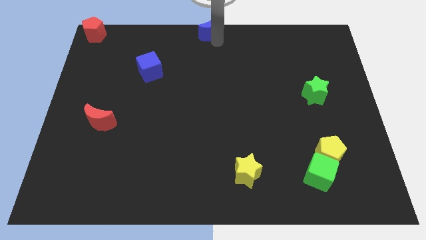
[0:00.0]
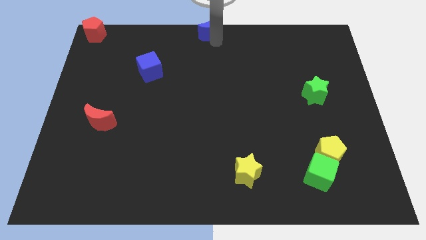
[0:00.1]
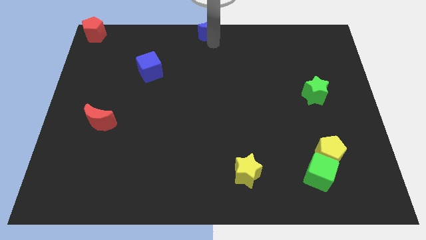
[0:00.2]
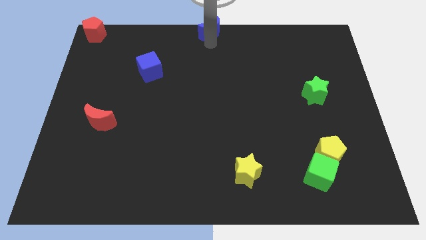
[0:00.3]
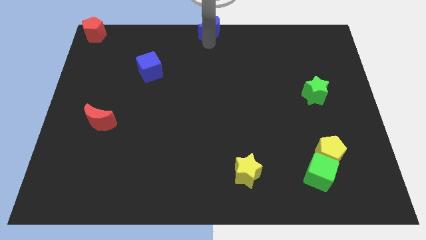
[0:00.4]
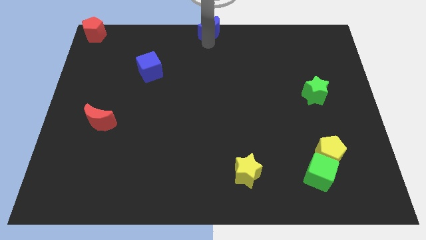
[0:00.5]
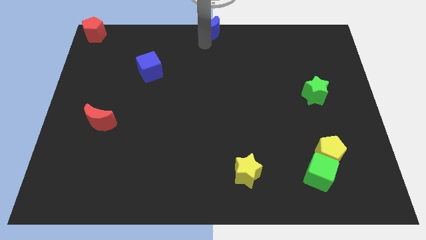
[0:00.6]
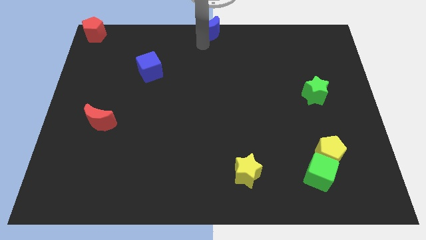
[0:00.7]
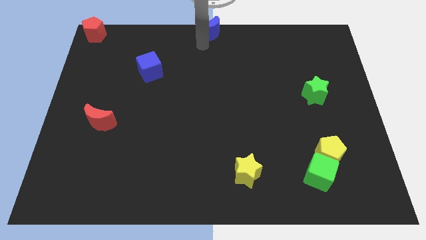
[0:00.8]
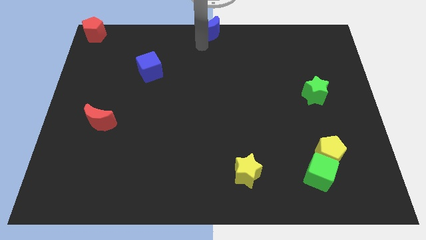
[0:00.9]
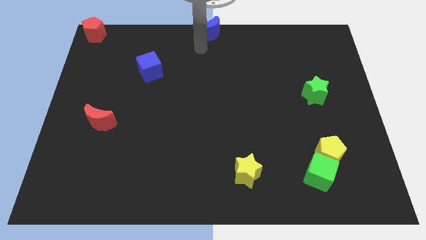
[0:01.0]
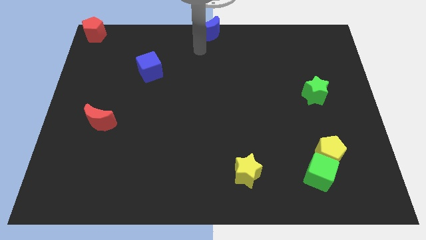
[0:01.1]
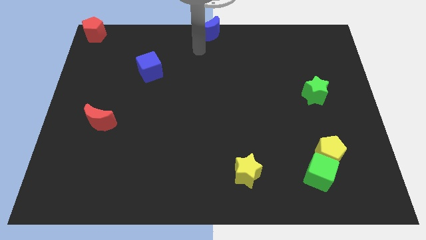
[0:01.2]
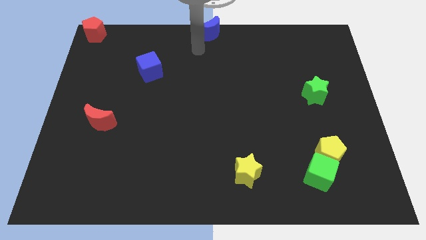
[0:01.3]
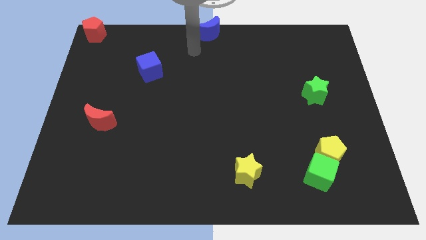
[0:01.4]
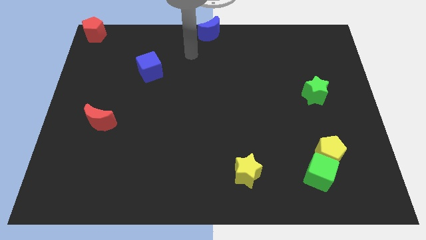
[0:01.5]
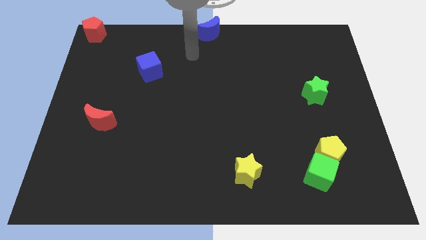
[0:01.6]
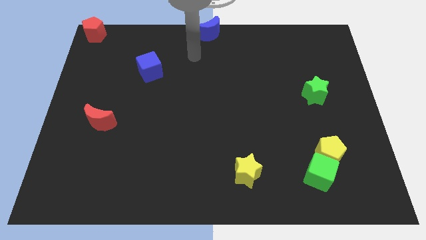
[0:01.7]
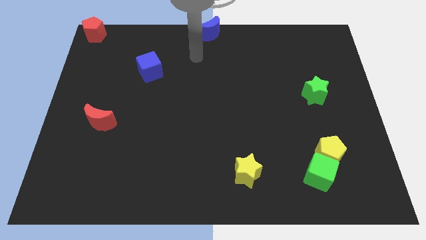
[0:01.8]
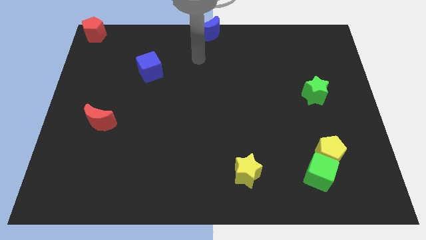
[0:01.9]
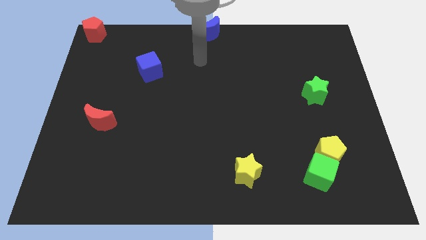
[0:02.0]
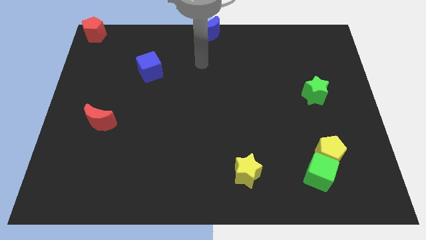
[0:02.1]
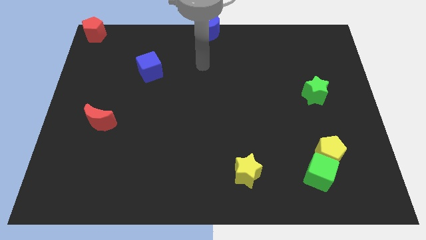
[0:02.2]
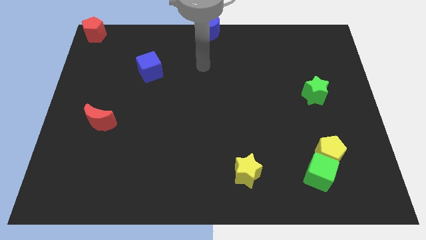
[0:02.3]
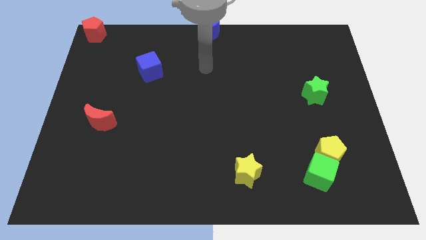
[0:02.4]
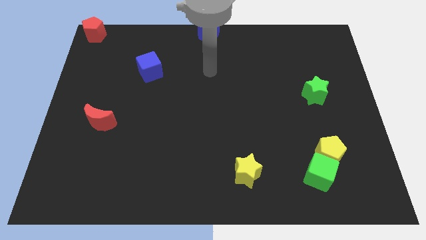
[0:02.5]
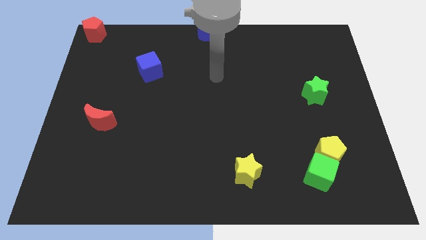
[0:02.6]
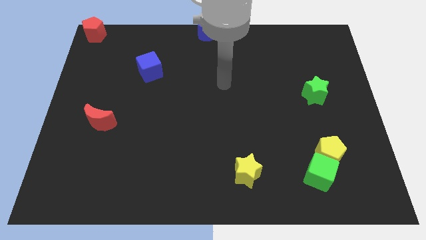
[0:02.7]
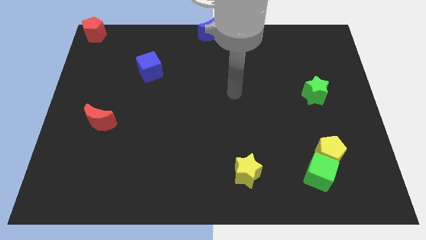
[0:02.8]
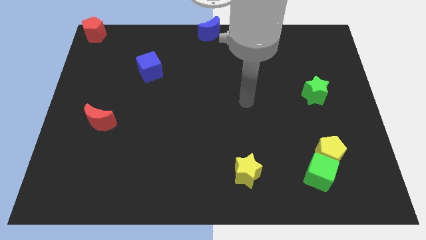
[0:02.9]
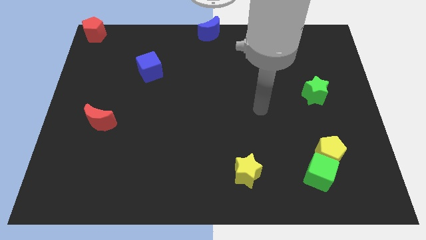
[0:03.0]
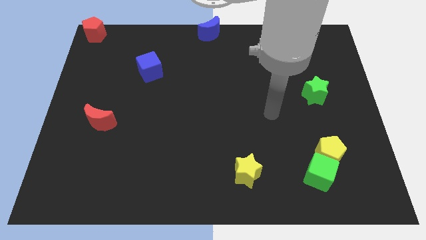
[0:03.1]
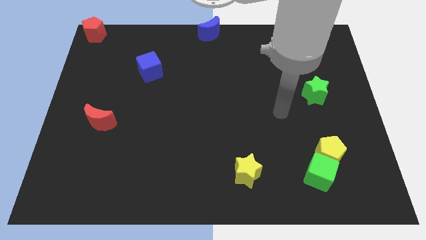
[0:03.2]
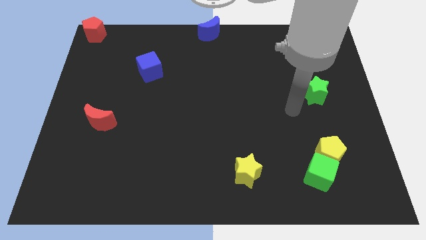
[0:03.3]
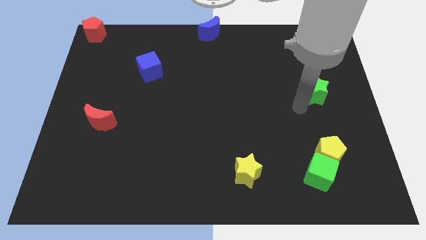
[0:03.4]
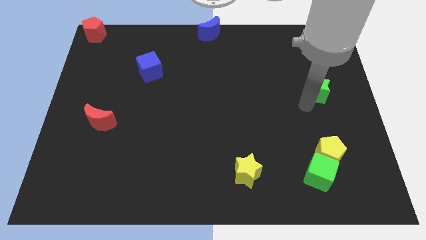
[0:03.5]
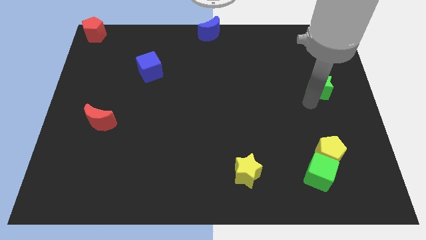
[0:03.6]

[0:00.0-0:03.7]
move your arm away from blue moon

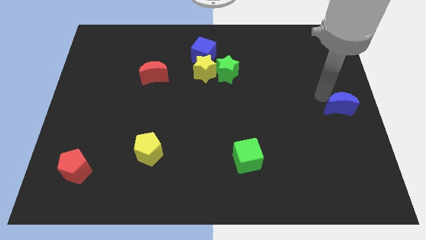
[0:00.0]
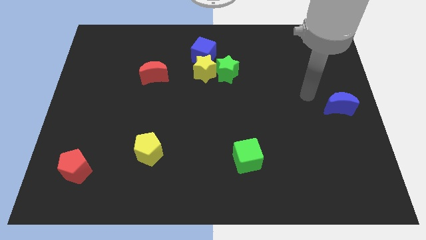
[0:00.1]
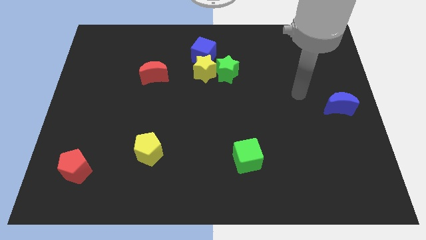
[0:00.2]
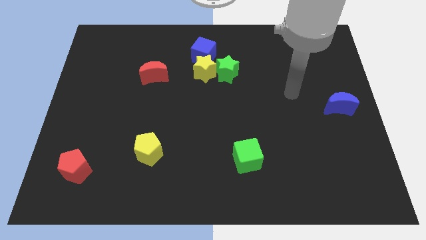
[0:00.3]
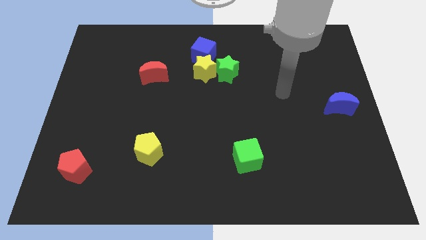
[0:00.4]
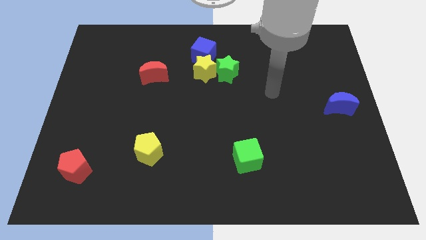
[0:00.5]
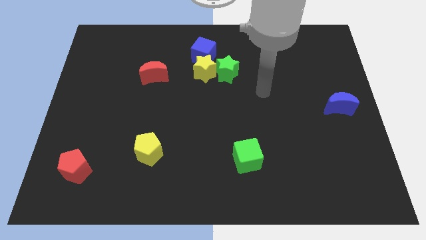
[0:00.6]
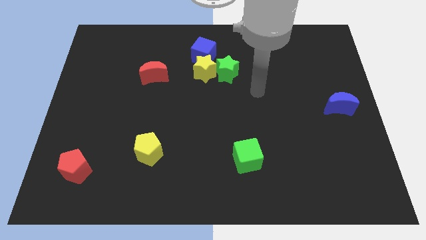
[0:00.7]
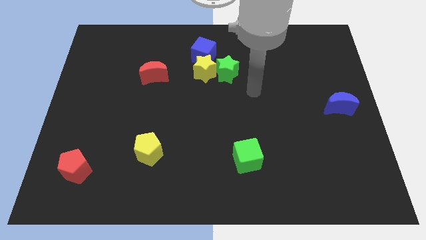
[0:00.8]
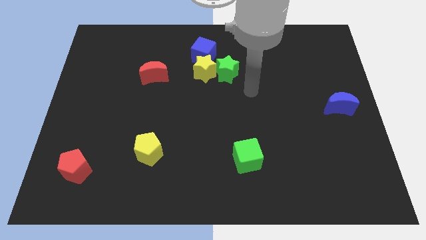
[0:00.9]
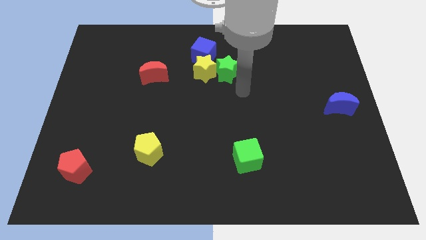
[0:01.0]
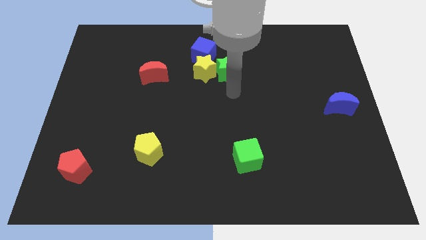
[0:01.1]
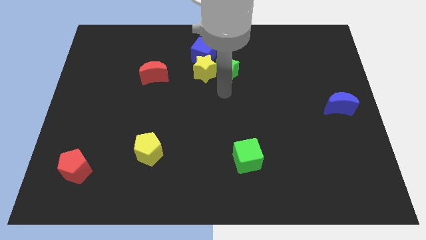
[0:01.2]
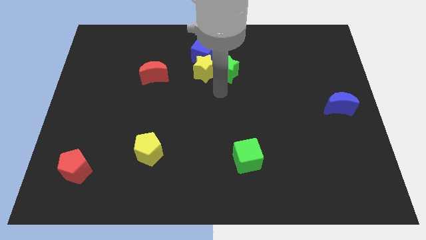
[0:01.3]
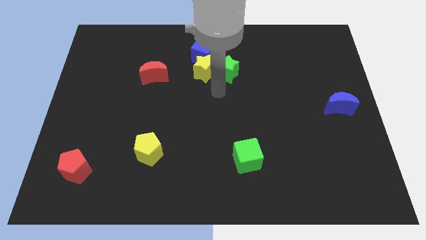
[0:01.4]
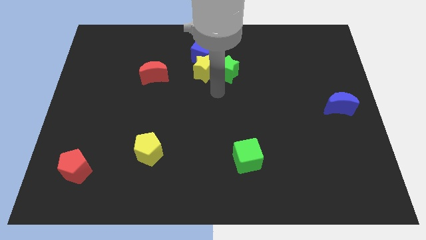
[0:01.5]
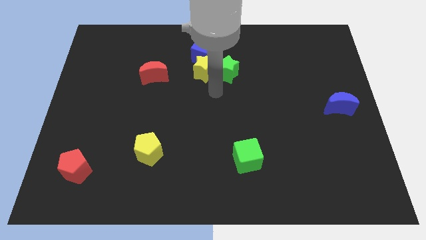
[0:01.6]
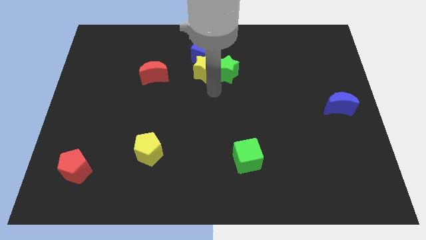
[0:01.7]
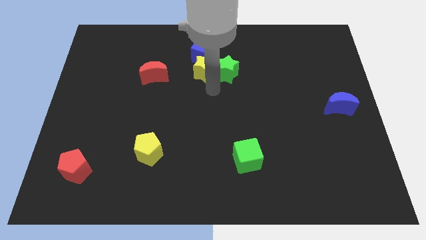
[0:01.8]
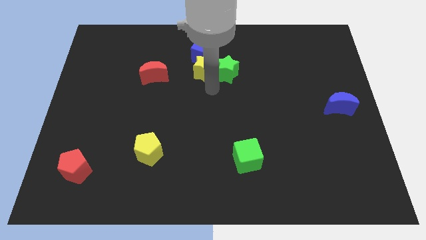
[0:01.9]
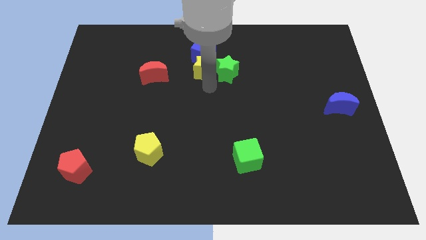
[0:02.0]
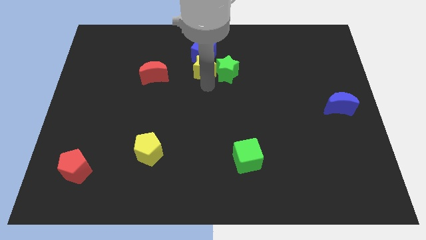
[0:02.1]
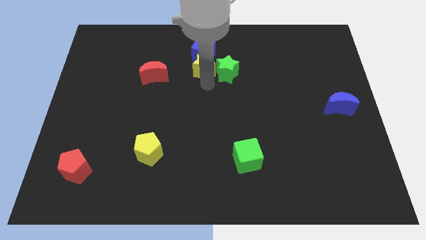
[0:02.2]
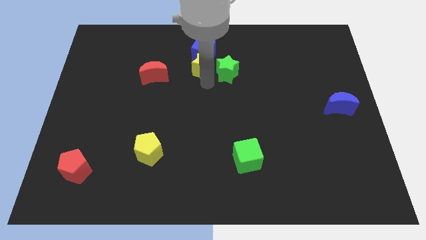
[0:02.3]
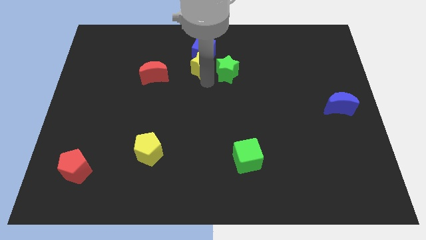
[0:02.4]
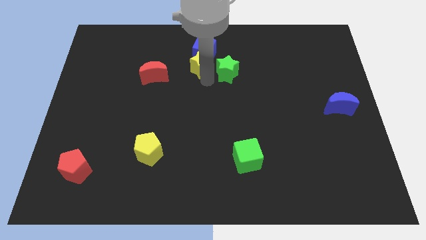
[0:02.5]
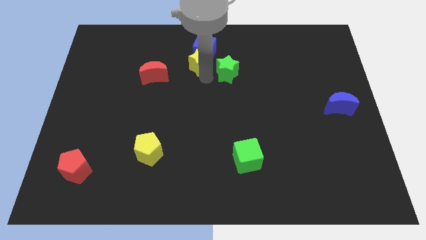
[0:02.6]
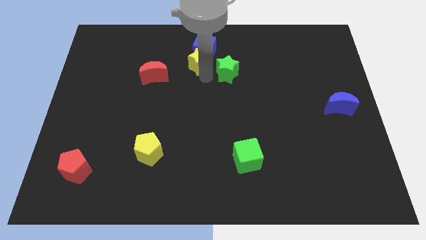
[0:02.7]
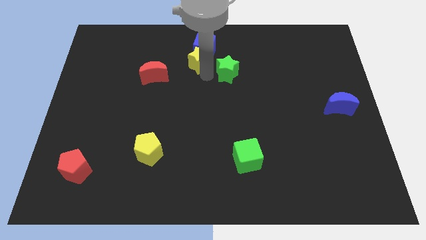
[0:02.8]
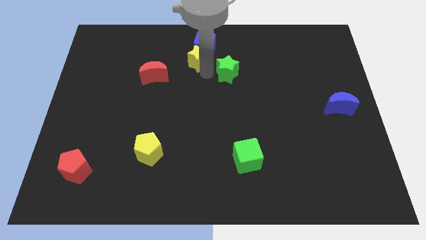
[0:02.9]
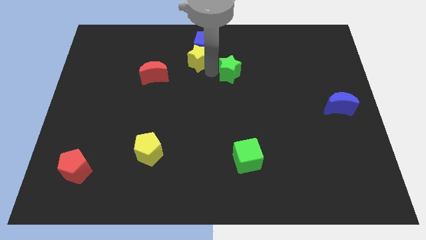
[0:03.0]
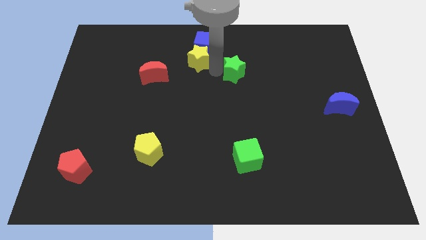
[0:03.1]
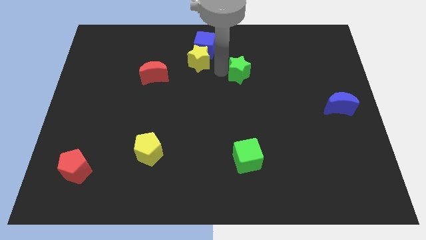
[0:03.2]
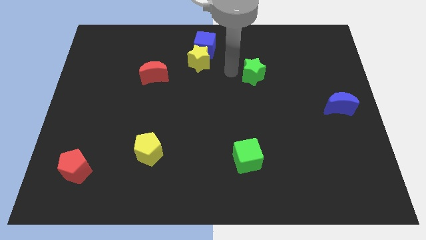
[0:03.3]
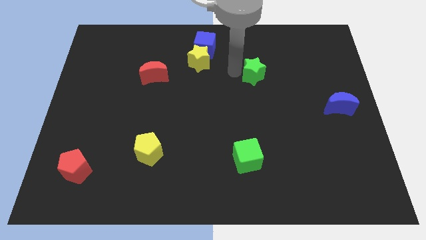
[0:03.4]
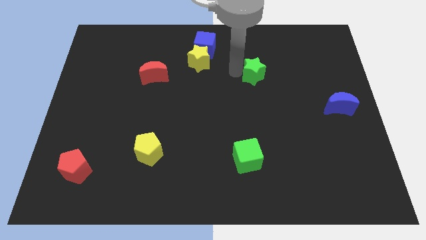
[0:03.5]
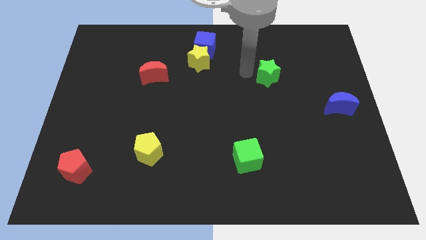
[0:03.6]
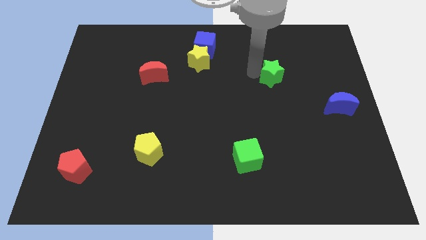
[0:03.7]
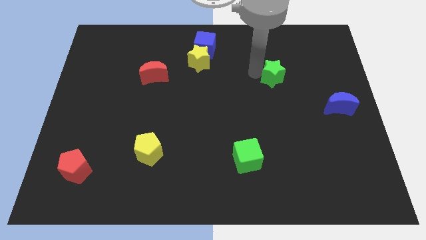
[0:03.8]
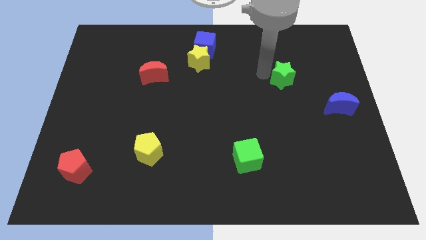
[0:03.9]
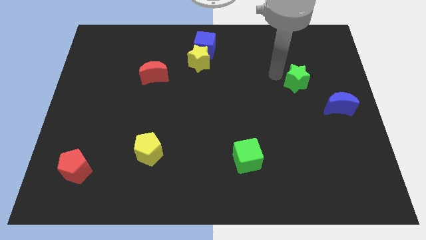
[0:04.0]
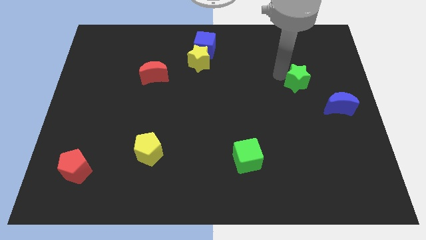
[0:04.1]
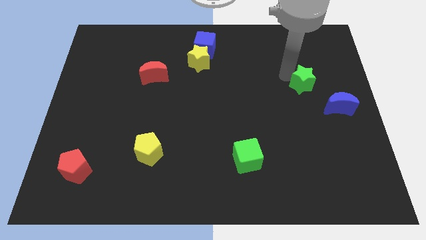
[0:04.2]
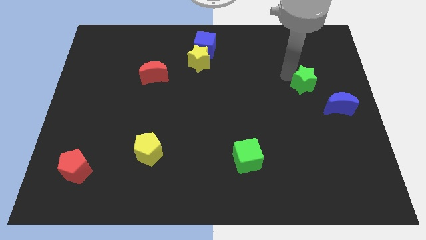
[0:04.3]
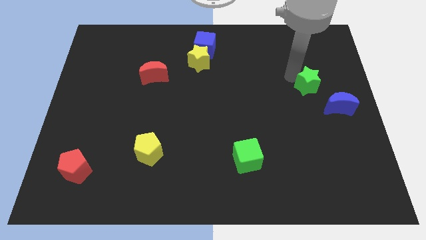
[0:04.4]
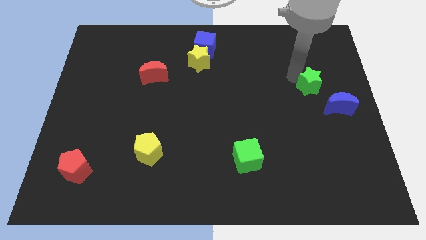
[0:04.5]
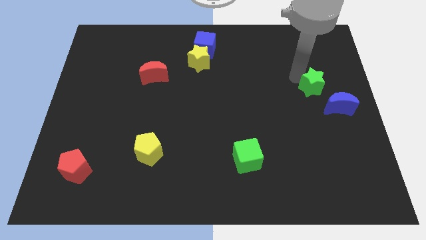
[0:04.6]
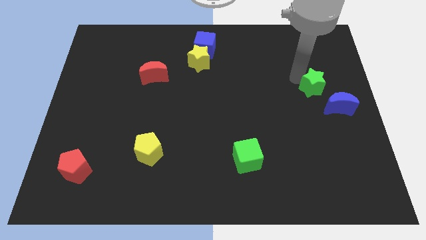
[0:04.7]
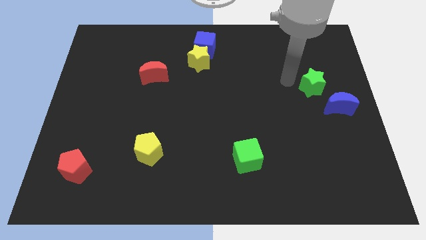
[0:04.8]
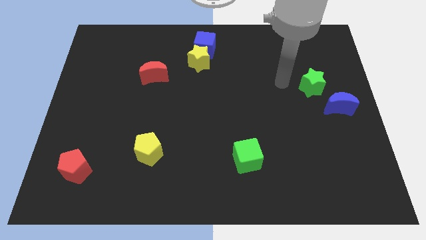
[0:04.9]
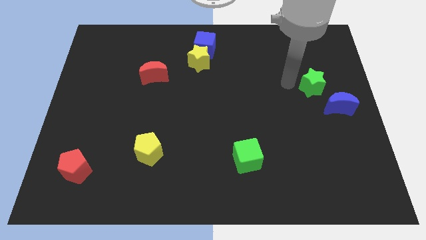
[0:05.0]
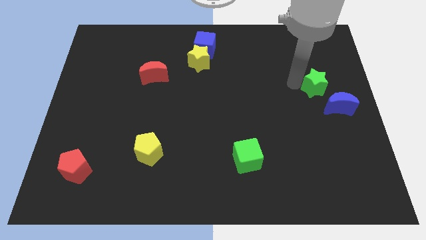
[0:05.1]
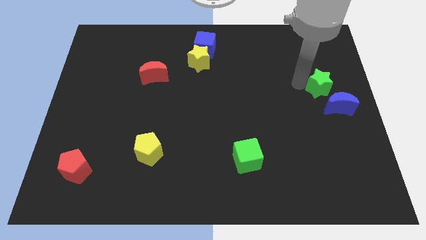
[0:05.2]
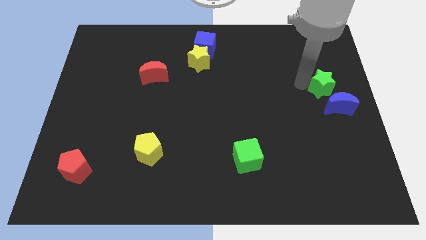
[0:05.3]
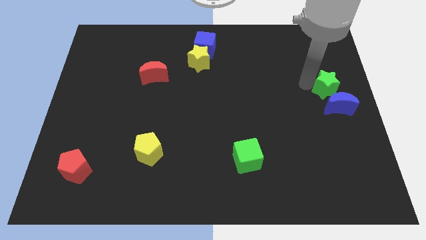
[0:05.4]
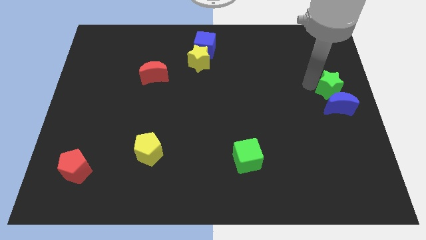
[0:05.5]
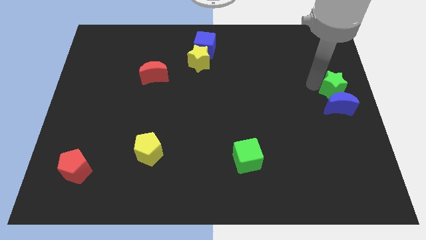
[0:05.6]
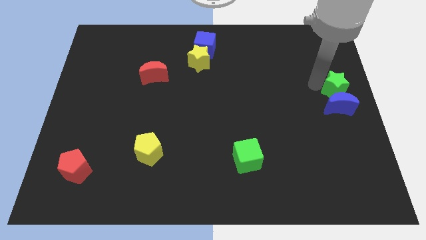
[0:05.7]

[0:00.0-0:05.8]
slide the green star to the top side of the blue crescent
